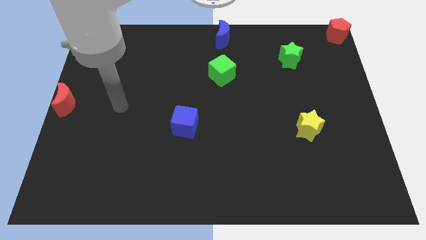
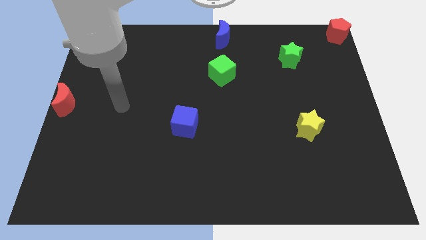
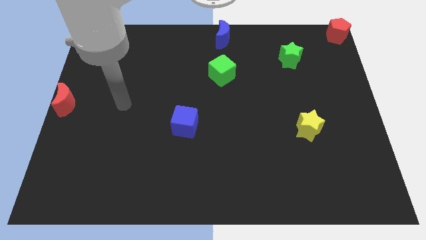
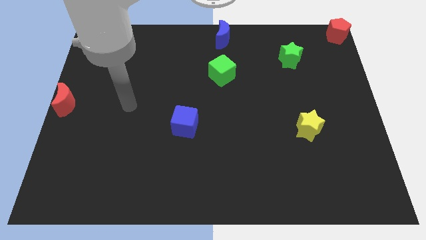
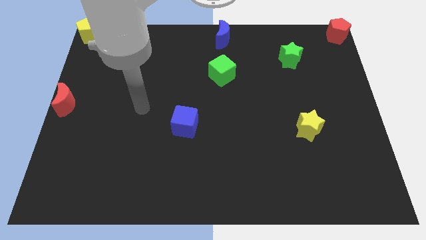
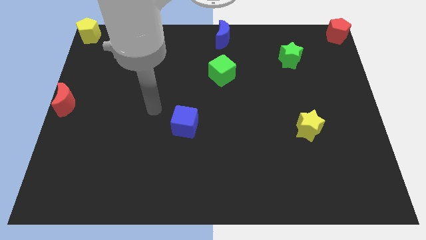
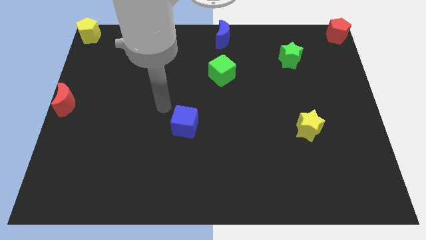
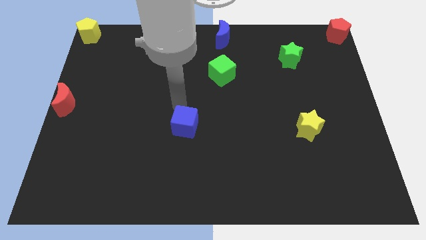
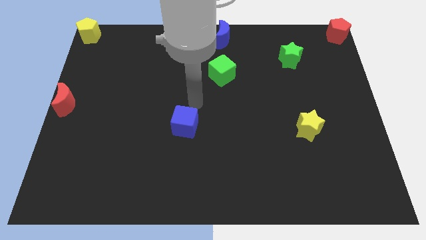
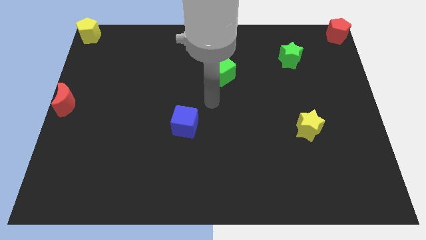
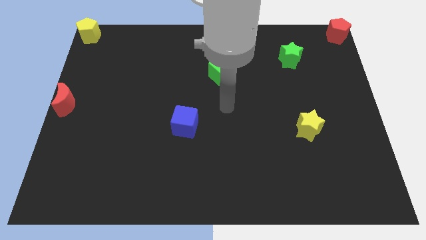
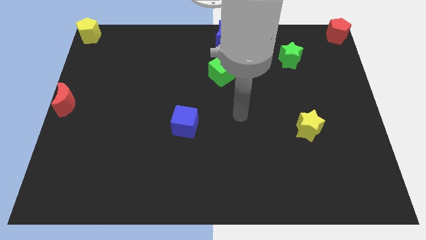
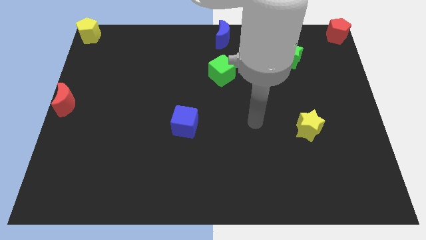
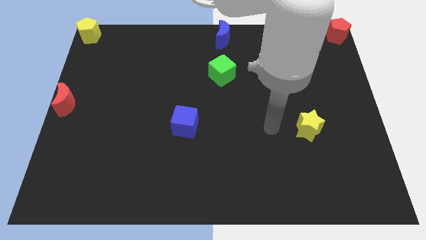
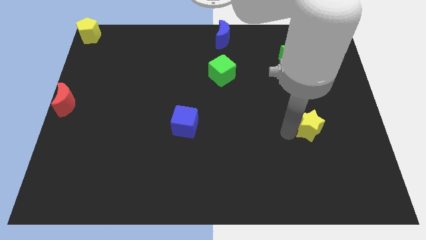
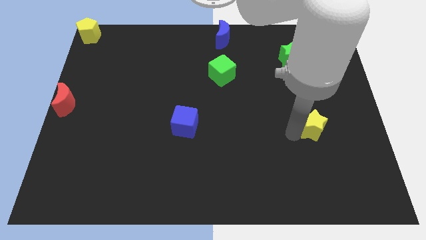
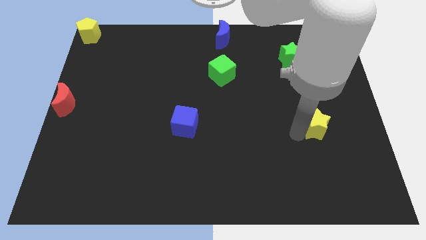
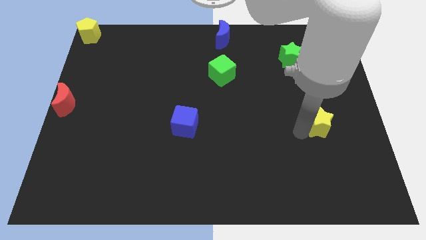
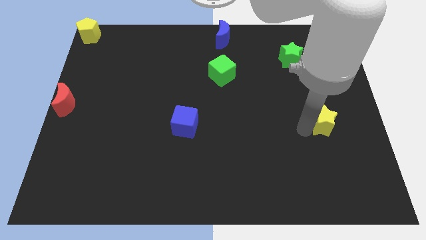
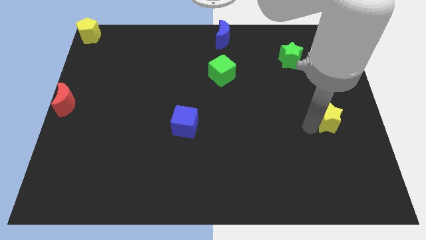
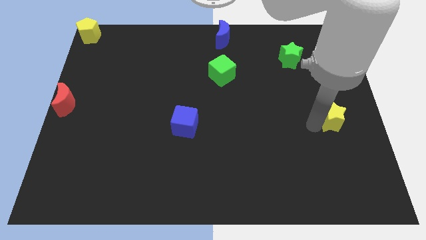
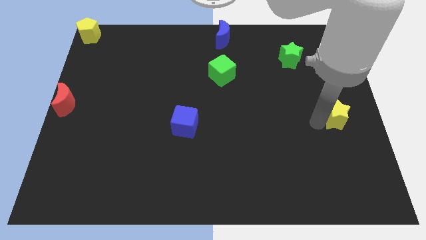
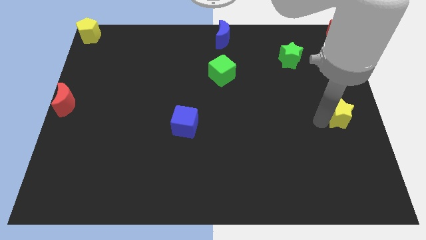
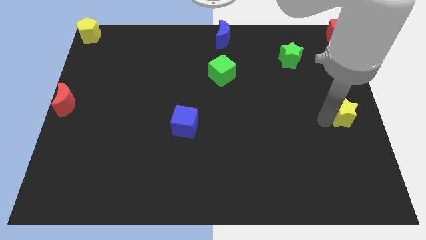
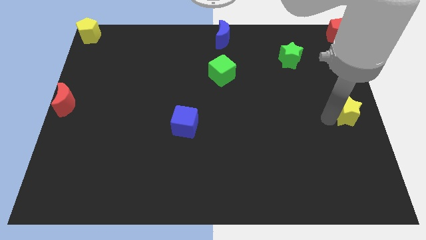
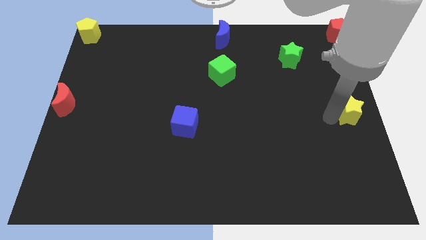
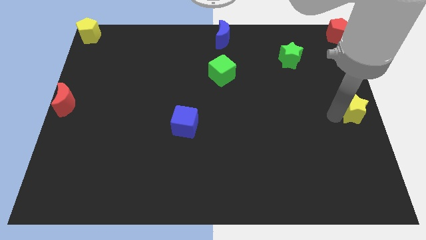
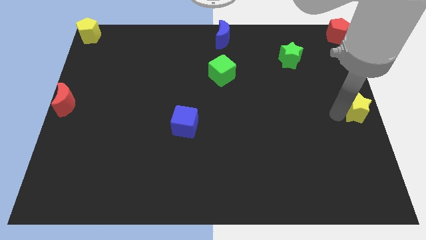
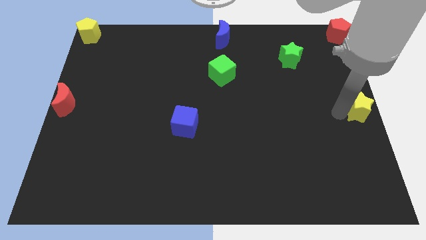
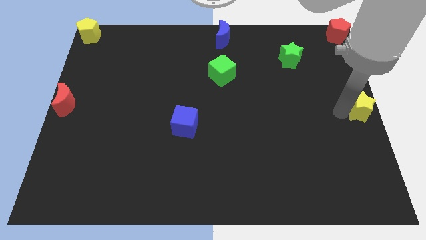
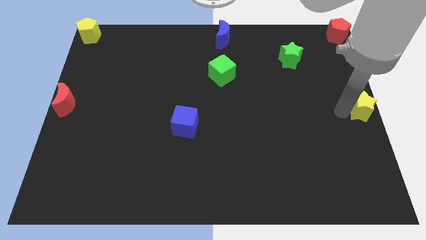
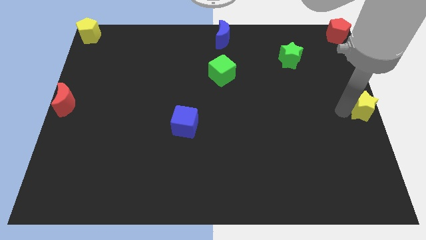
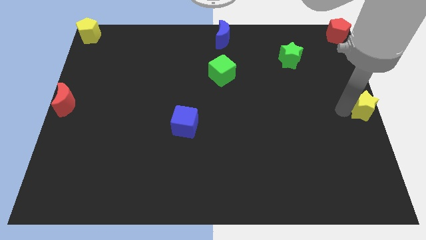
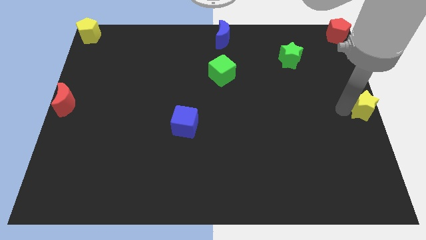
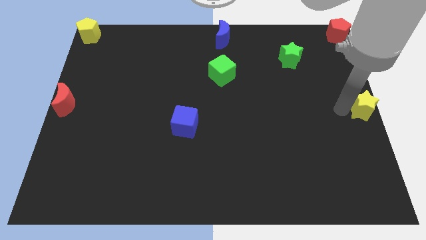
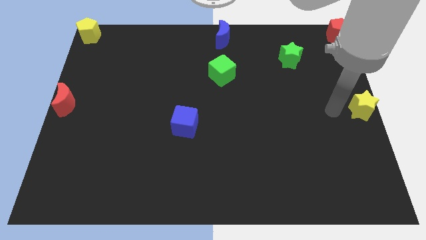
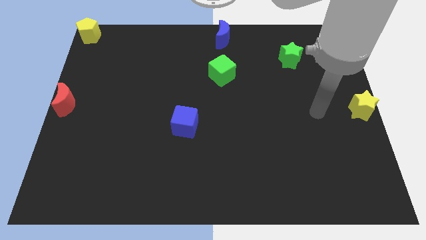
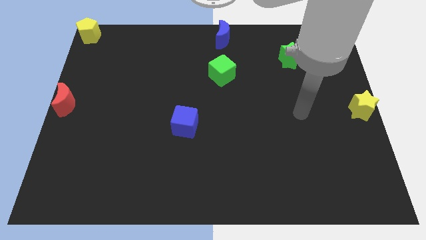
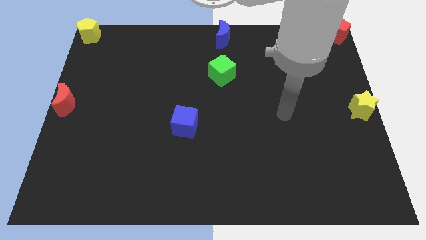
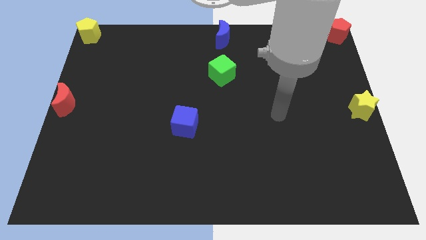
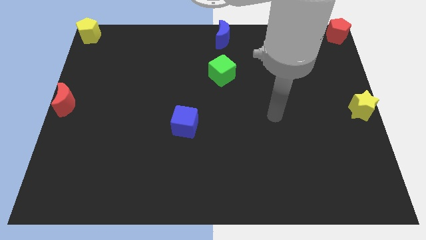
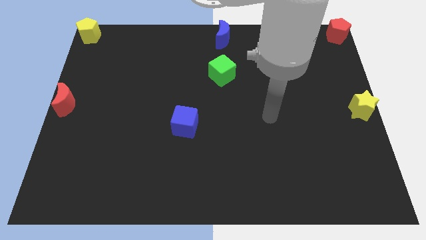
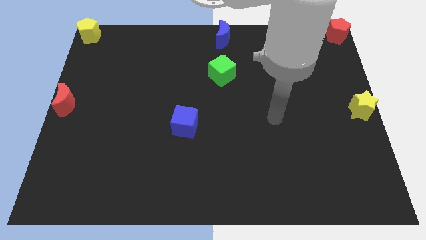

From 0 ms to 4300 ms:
move the yellow star to the right center of the board

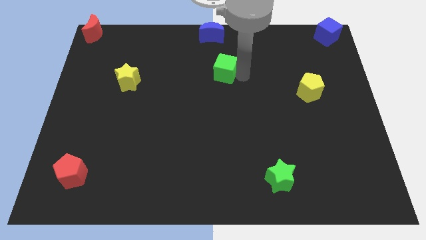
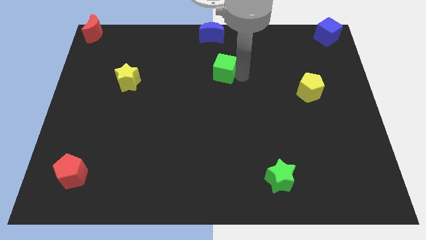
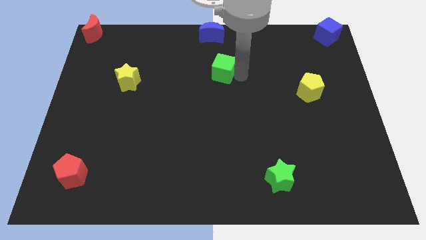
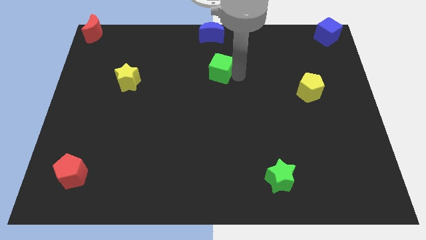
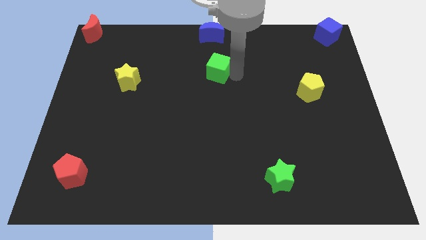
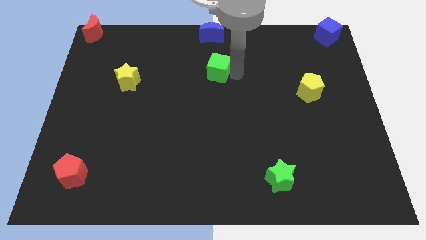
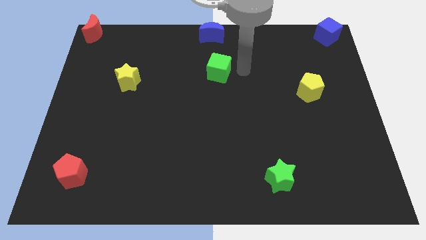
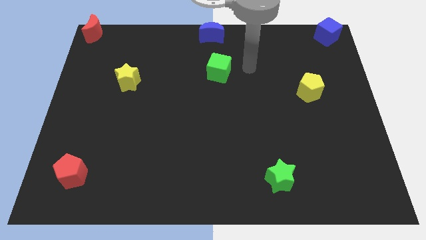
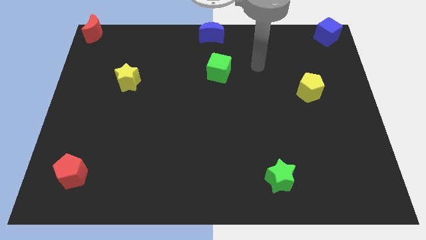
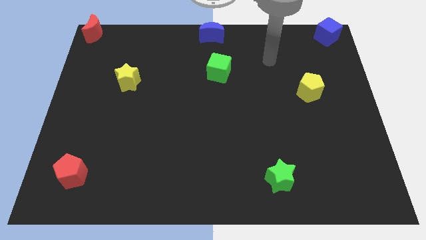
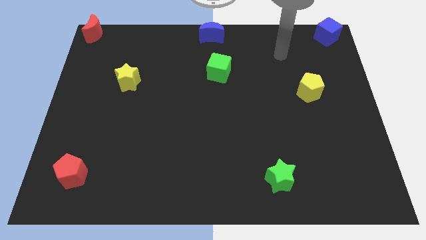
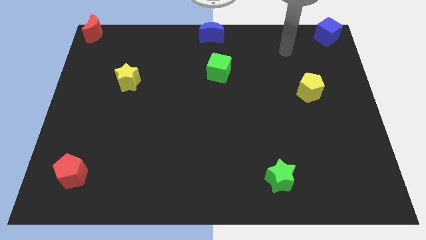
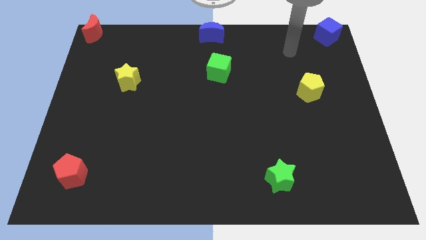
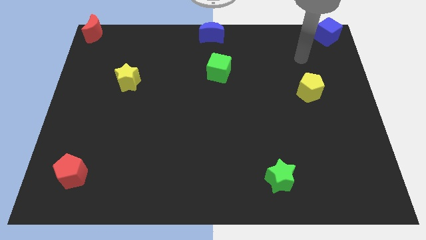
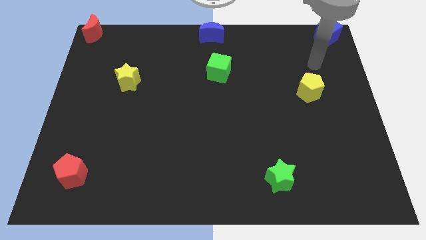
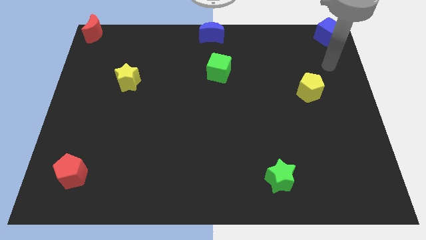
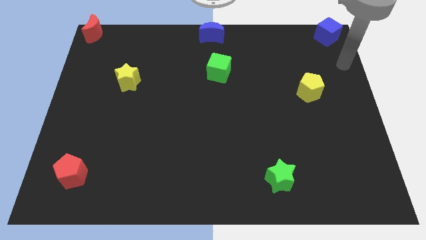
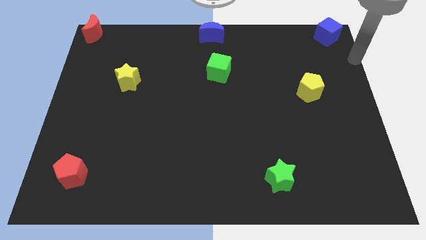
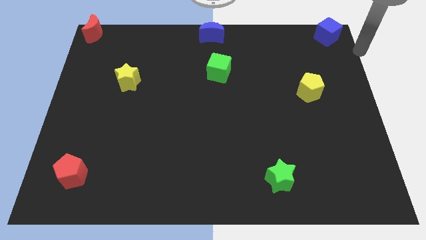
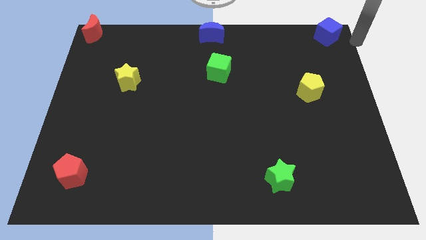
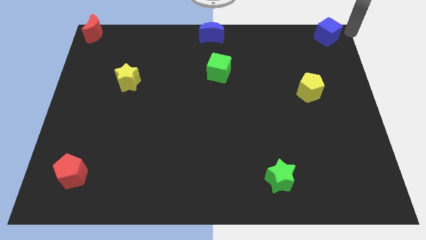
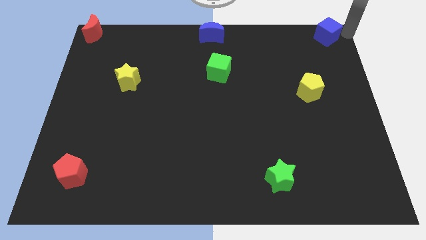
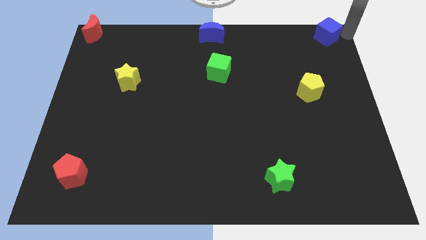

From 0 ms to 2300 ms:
slightly move the green cube to the left

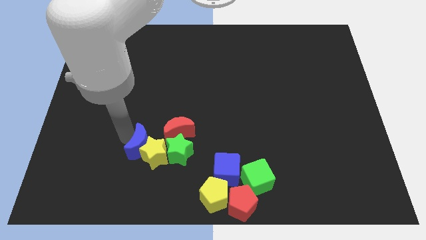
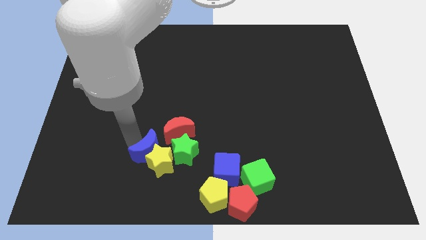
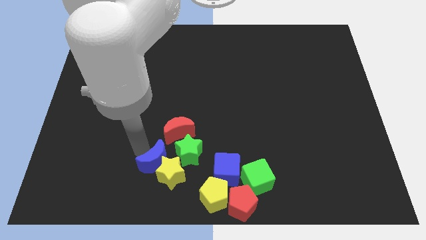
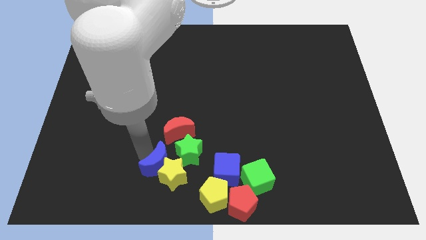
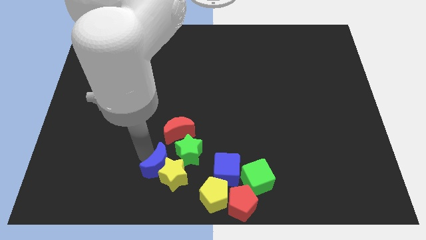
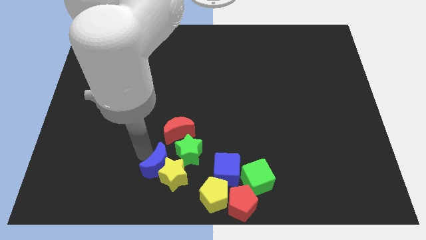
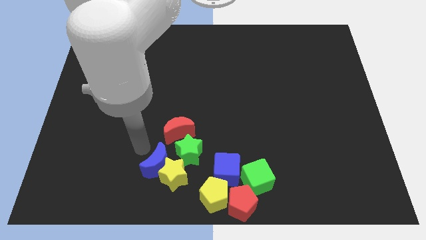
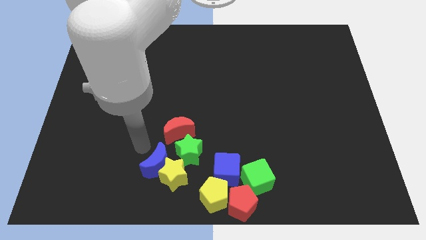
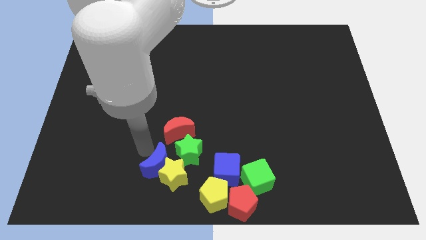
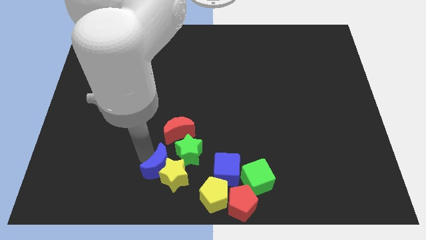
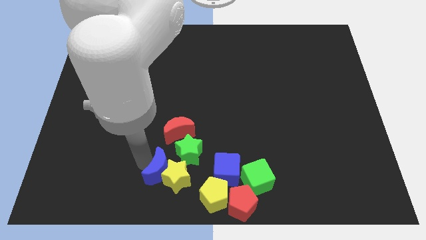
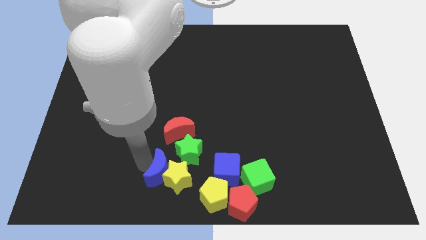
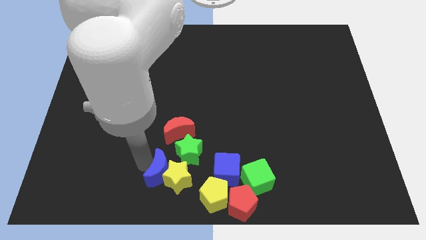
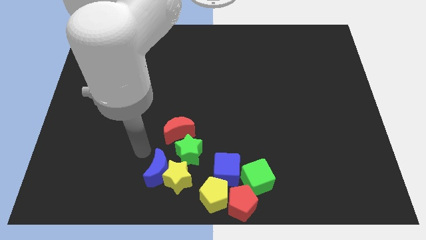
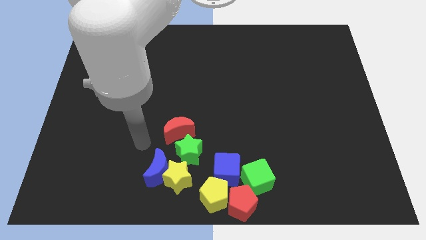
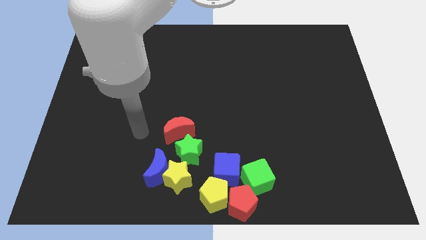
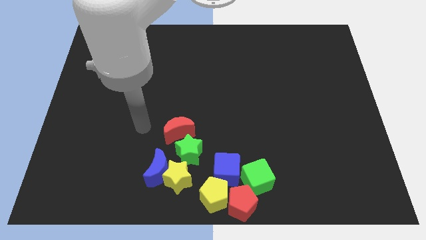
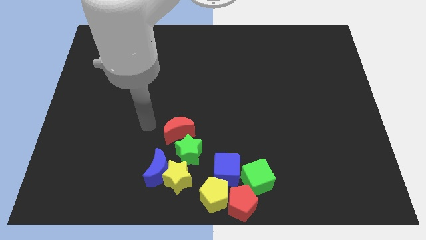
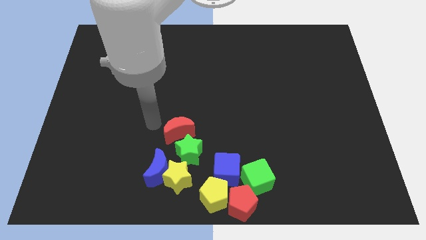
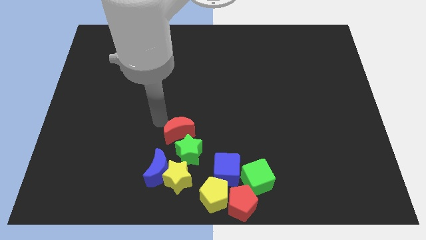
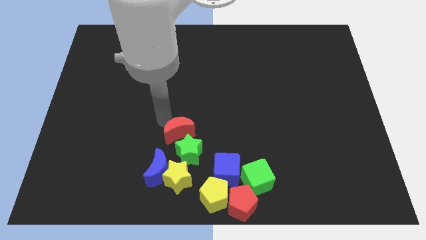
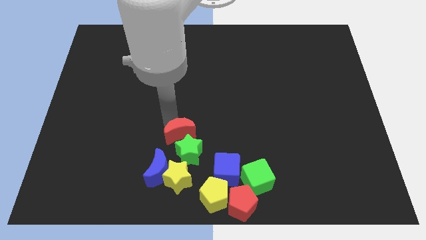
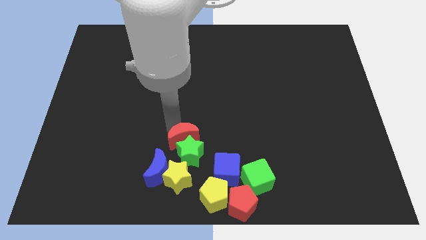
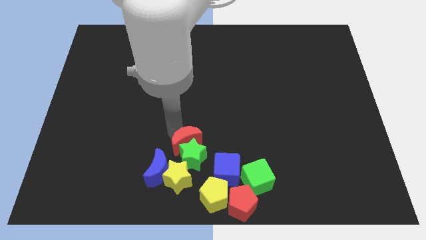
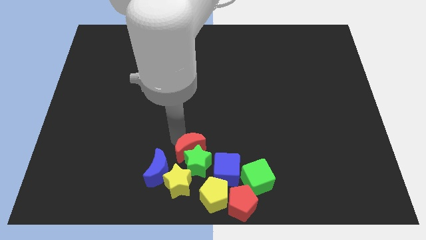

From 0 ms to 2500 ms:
push the blue moon and yellow star towards bottom
